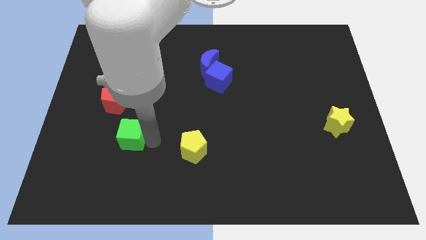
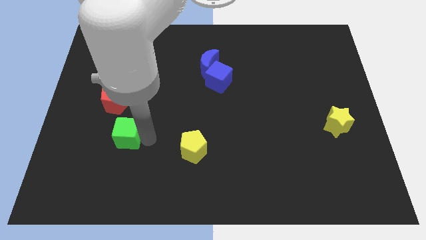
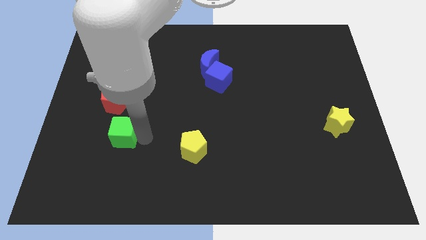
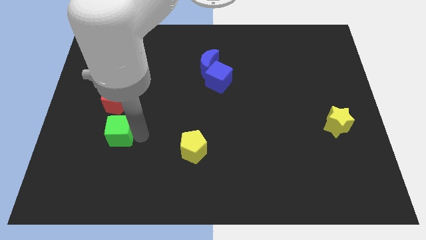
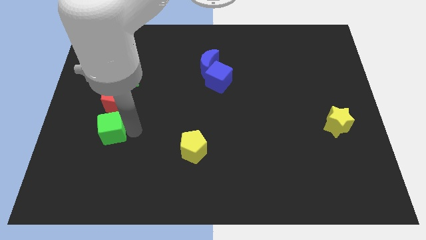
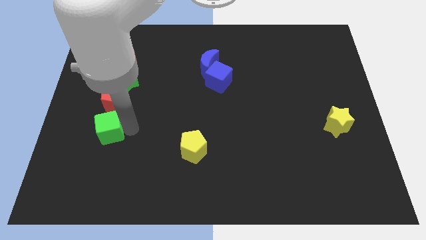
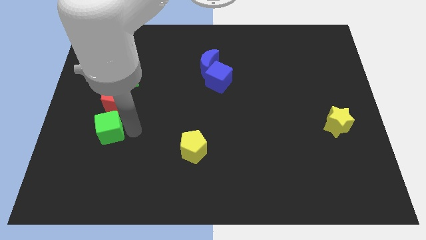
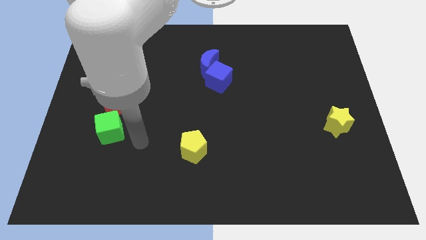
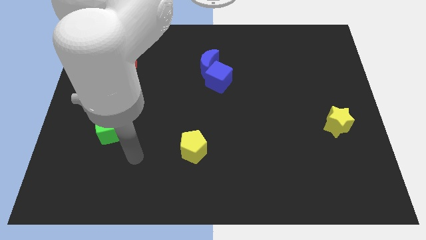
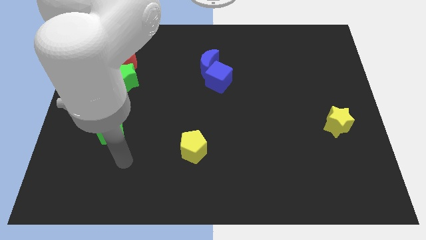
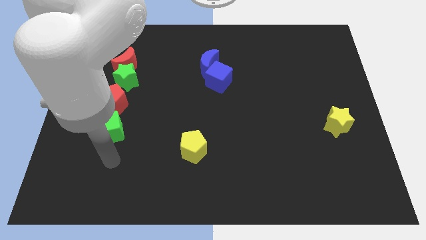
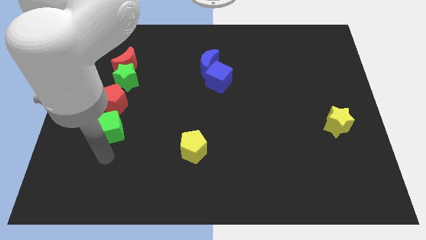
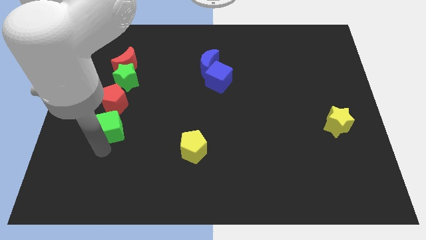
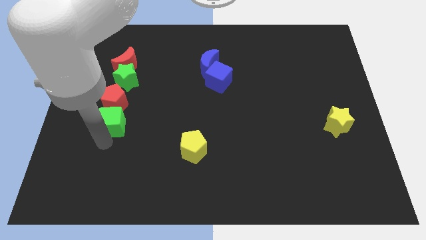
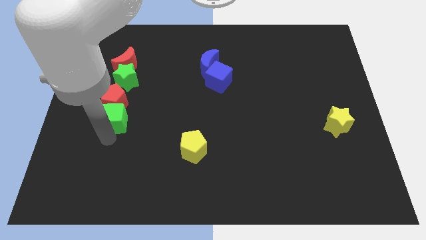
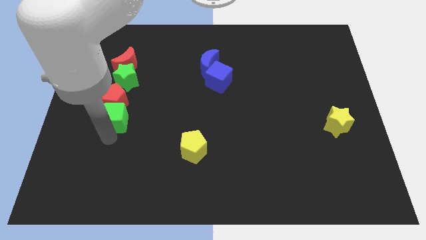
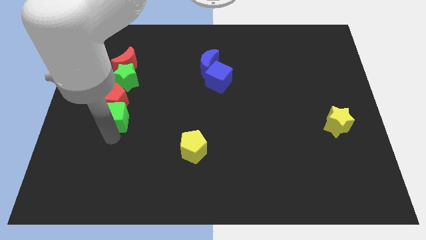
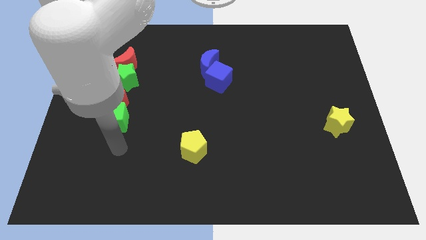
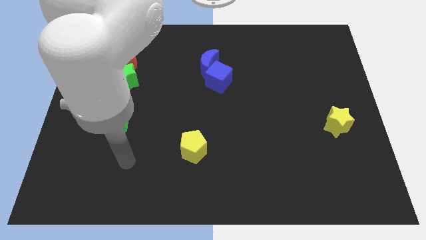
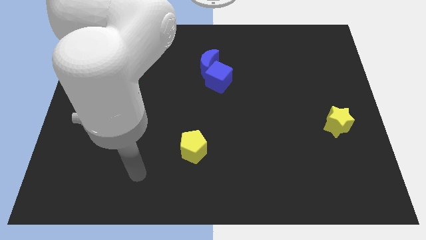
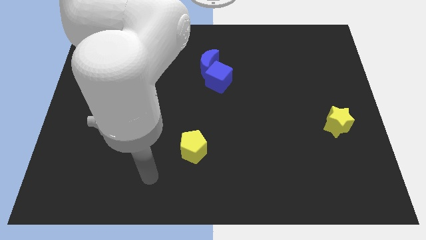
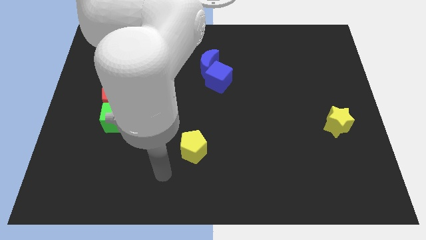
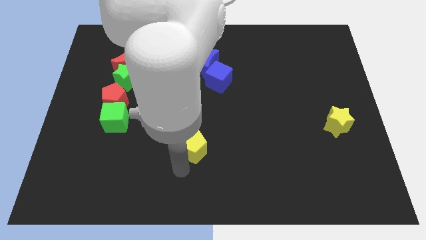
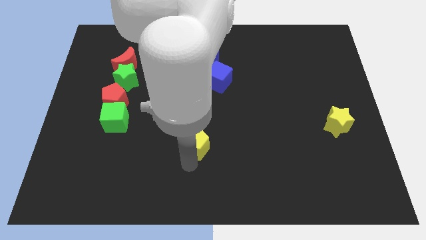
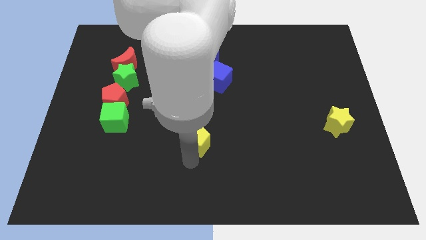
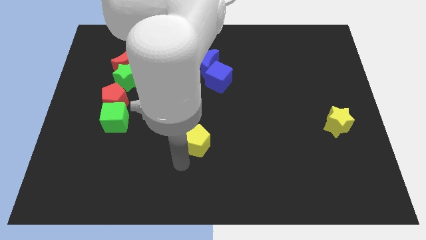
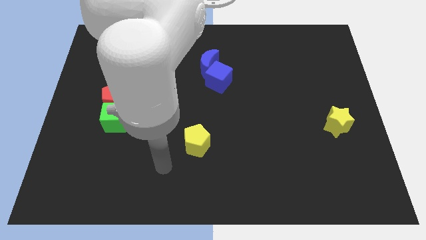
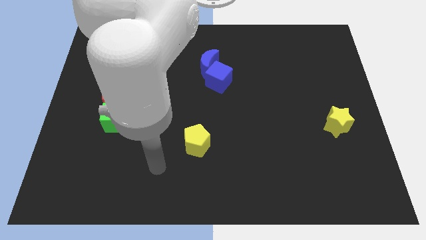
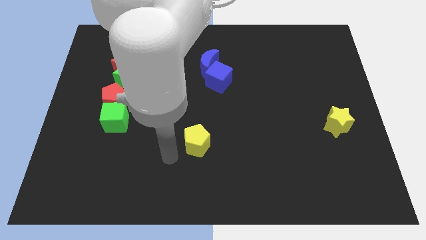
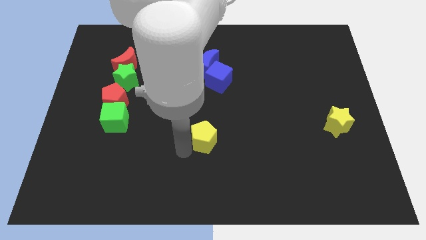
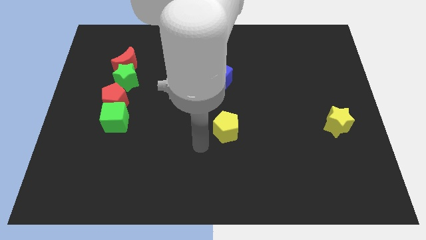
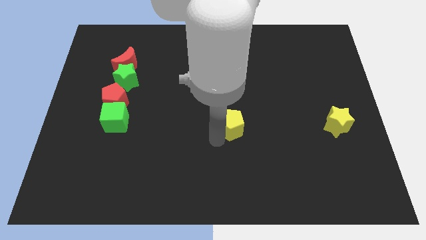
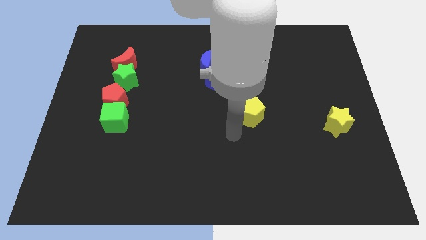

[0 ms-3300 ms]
move the yellow pentagon horizontal right to green cube

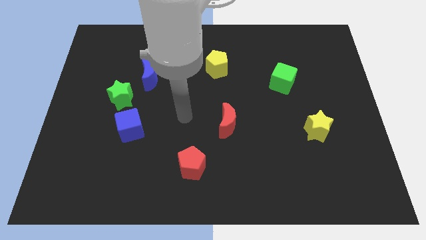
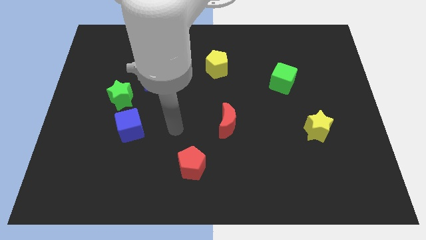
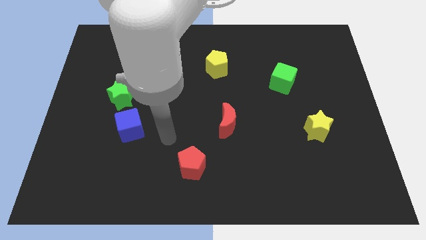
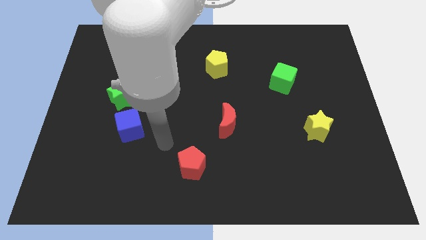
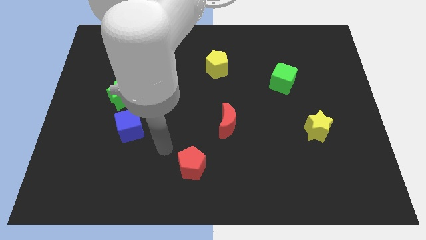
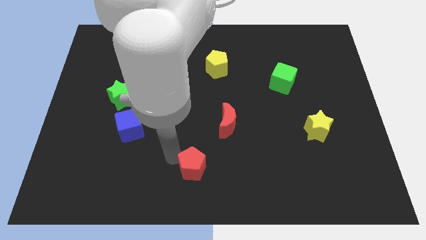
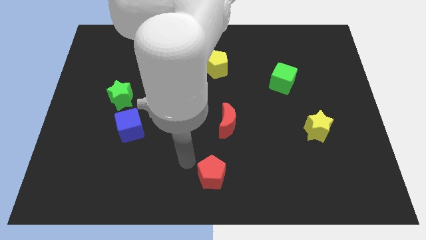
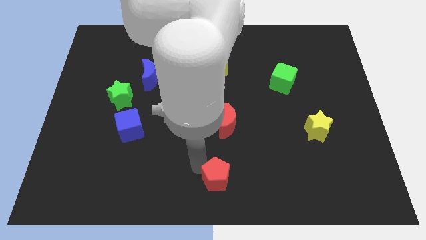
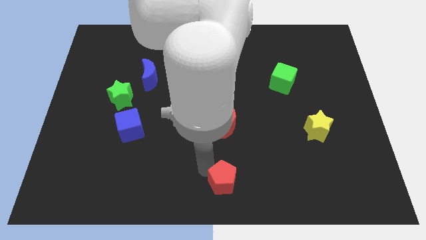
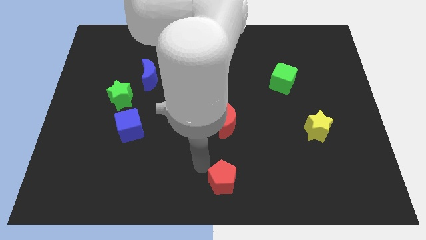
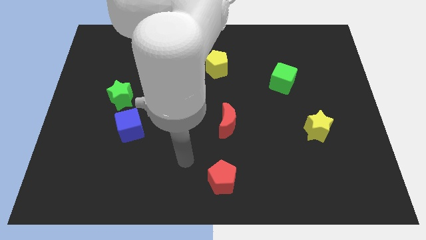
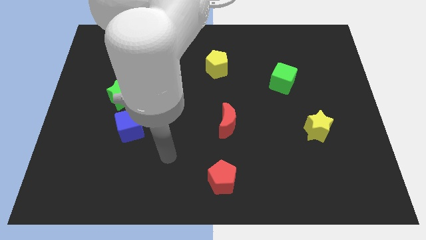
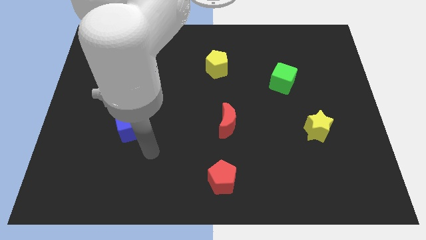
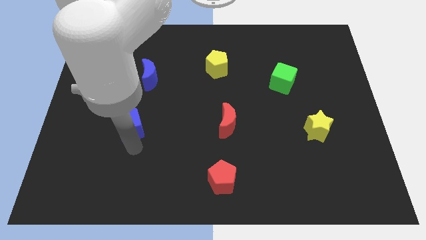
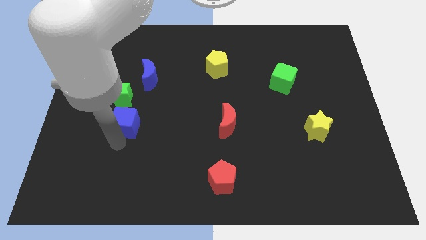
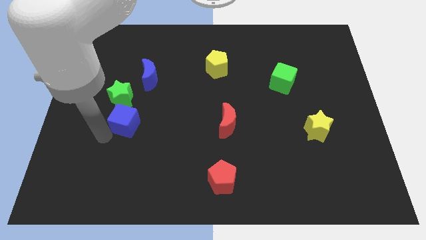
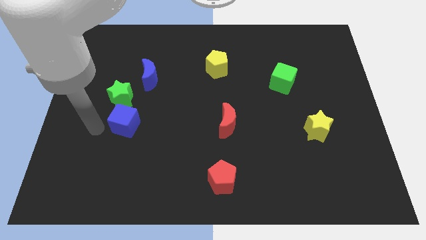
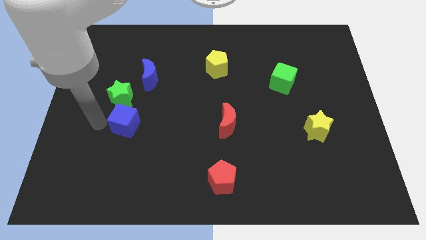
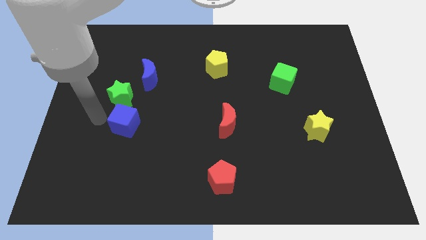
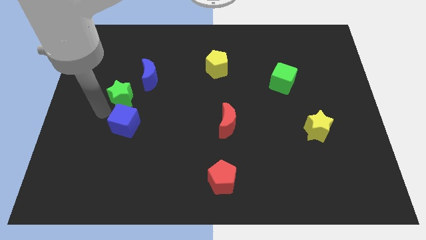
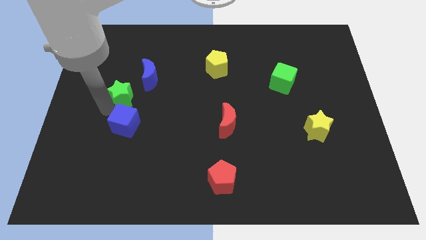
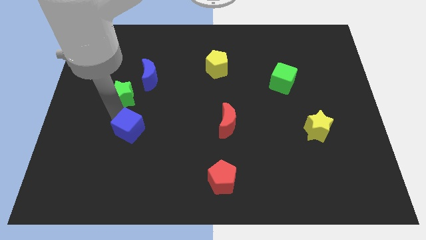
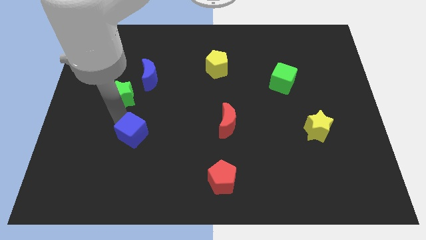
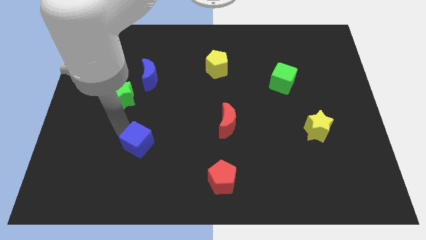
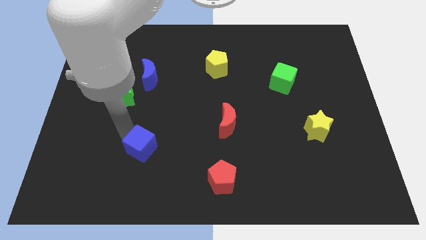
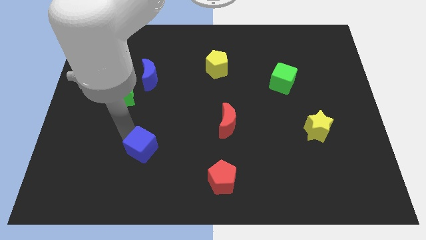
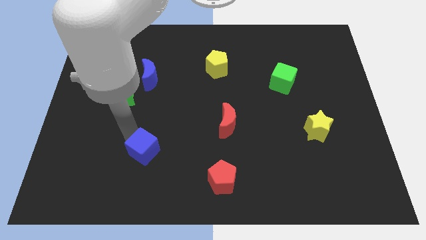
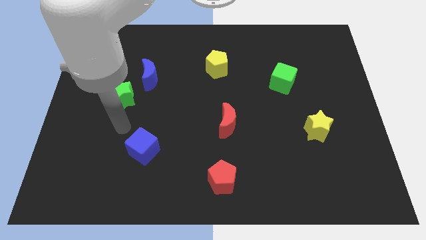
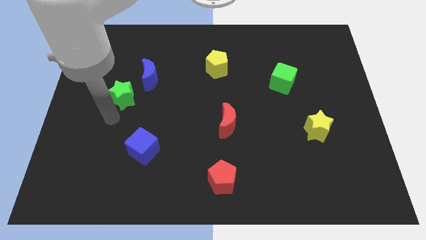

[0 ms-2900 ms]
place the blue cube diagonally to the top left of the red pentagon

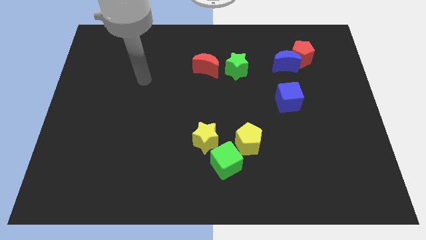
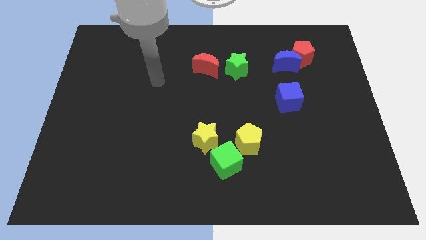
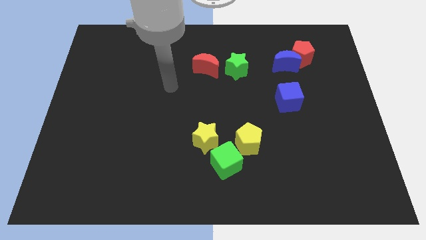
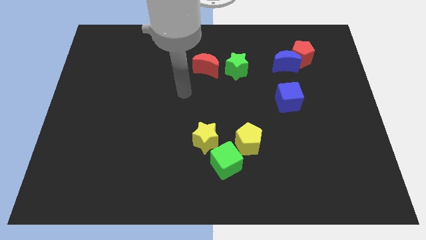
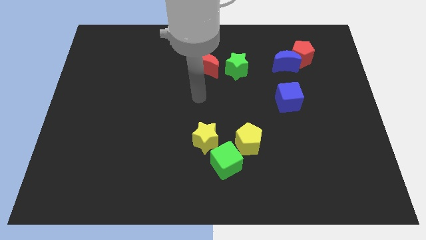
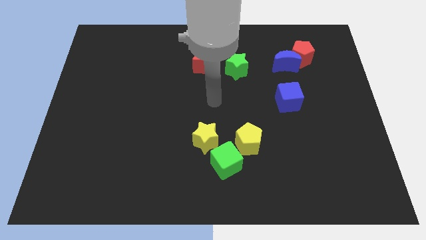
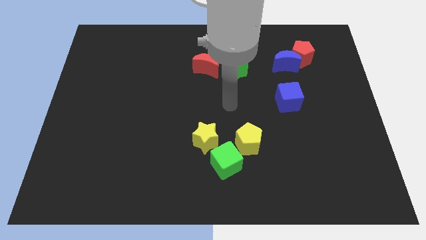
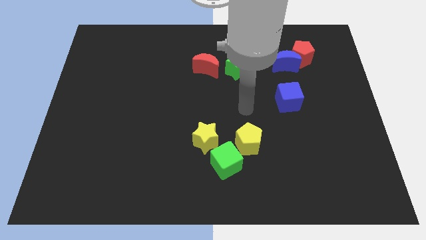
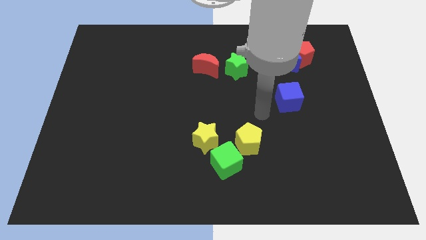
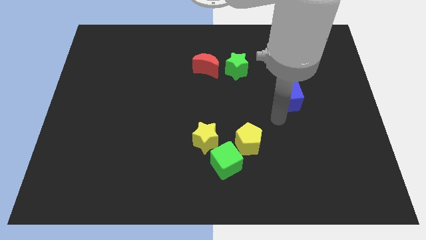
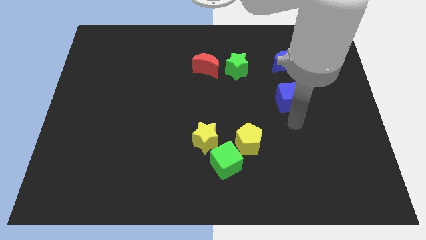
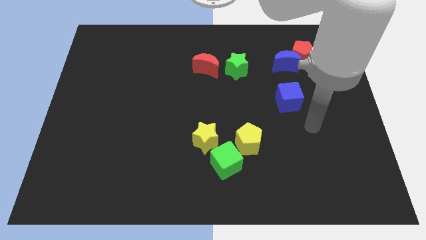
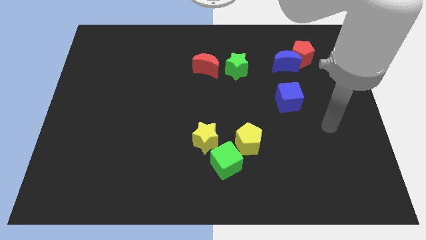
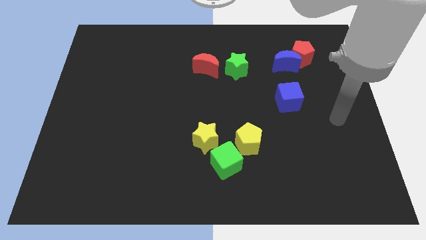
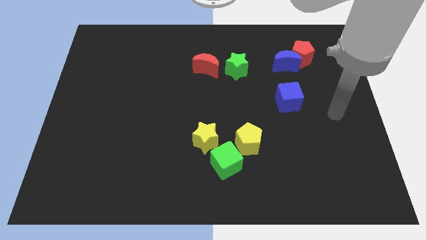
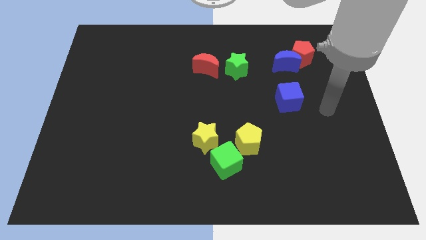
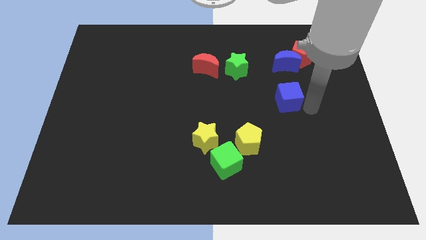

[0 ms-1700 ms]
move your arm towards the blue cube

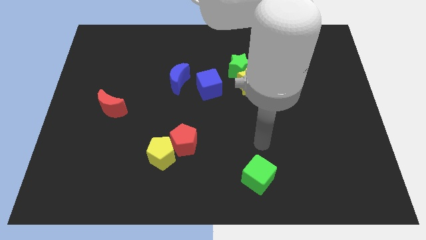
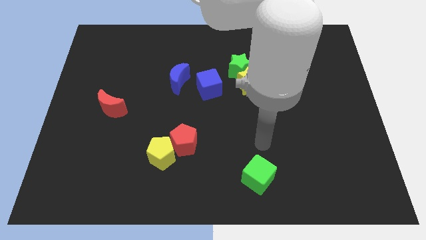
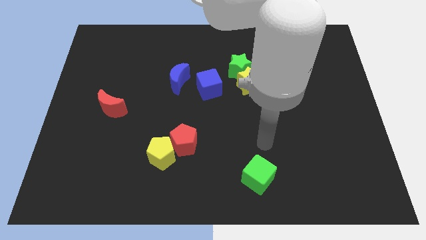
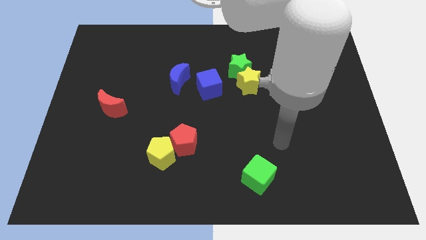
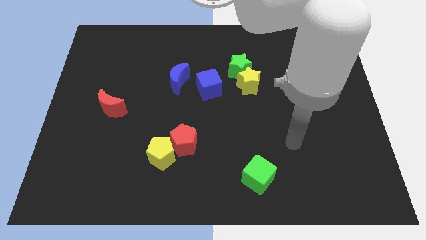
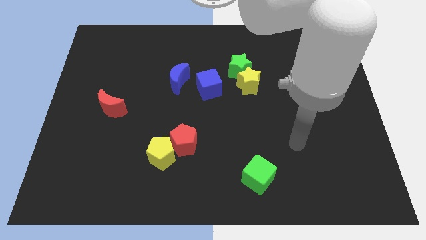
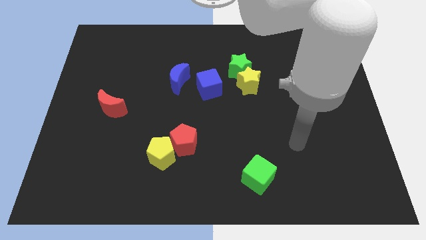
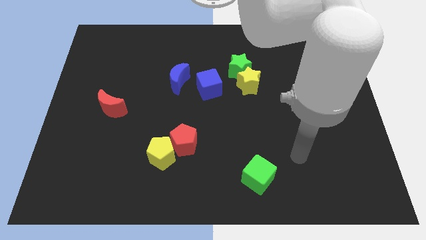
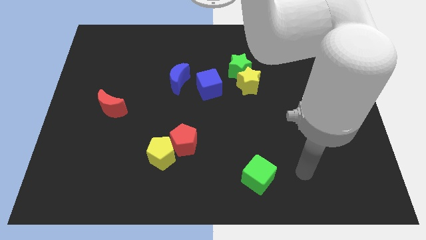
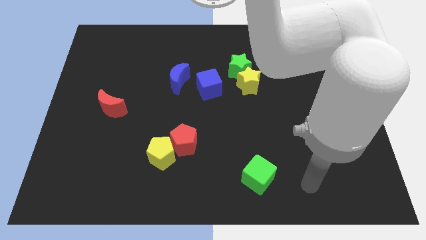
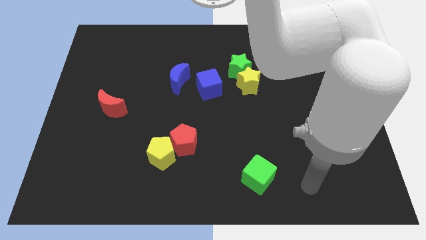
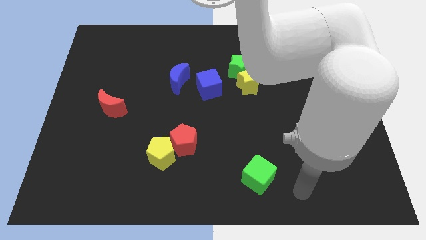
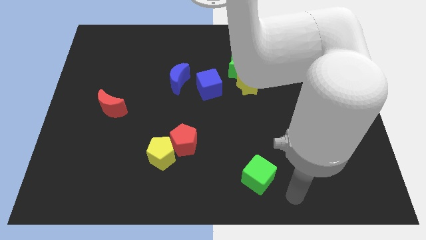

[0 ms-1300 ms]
move your arm to the bottom center
